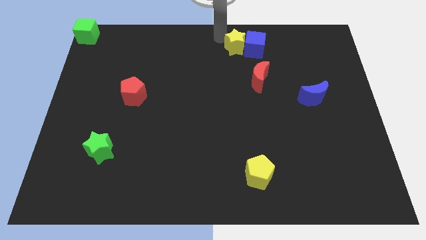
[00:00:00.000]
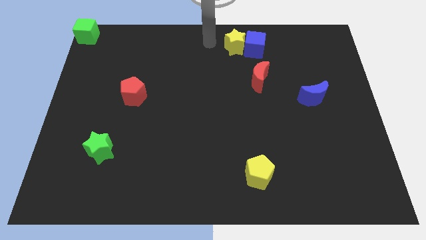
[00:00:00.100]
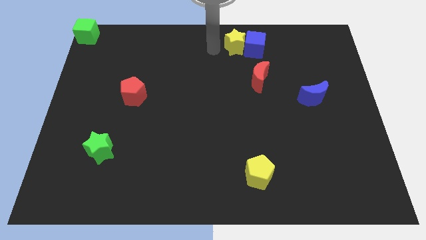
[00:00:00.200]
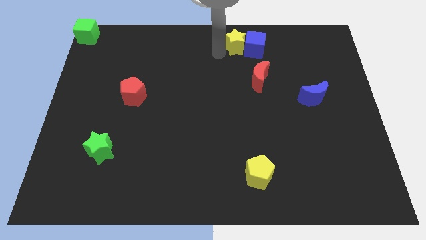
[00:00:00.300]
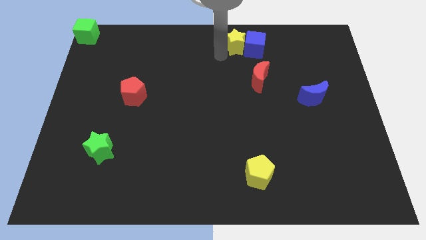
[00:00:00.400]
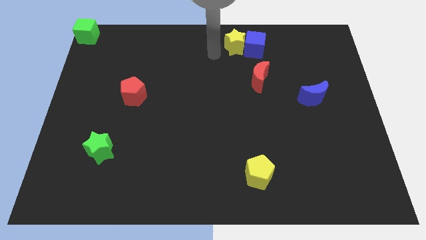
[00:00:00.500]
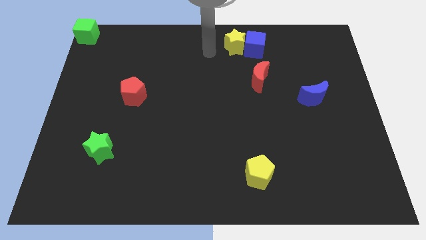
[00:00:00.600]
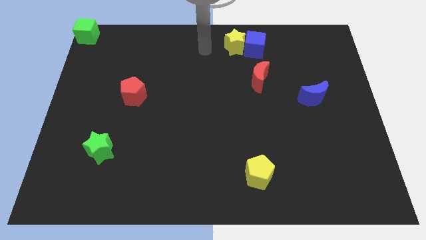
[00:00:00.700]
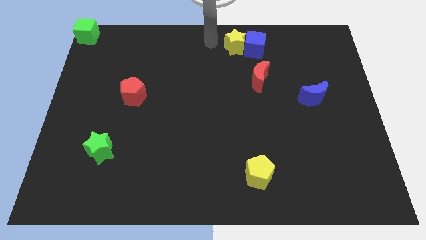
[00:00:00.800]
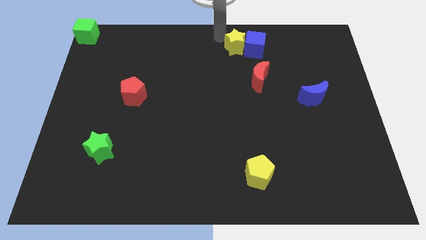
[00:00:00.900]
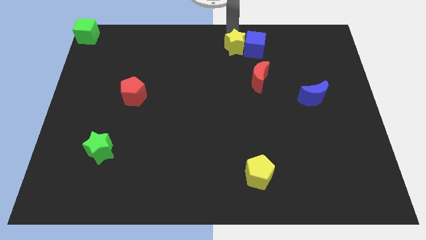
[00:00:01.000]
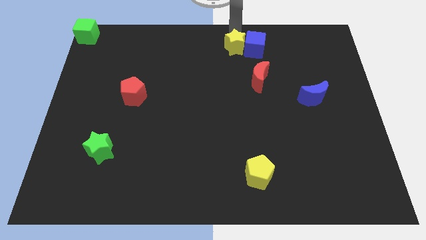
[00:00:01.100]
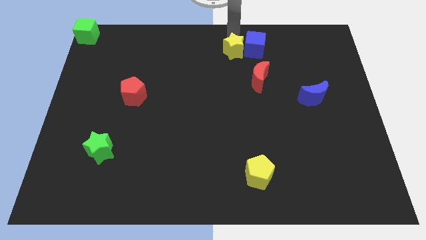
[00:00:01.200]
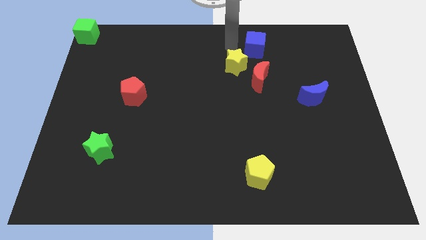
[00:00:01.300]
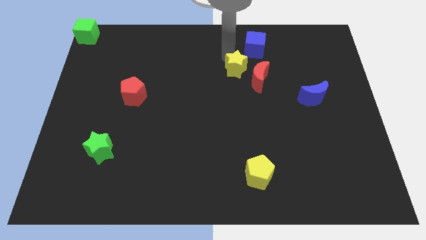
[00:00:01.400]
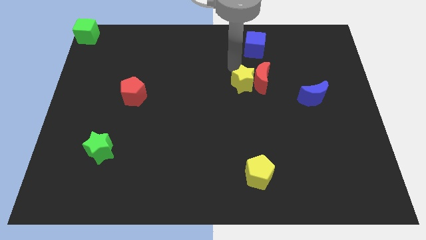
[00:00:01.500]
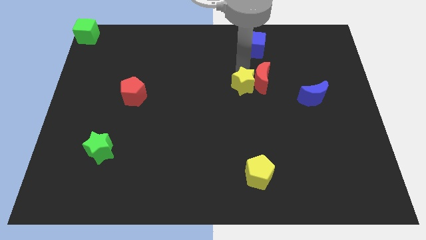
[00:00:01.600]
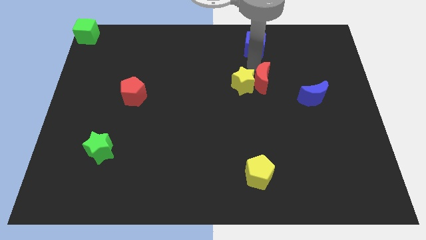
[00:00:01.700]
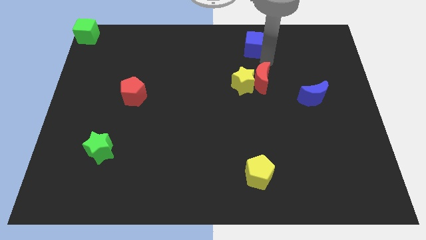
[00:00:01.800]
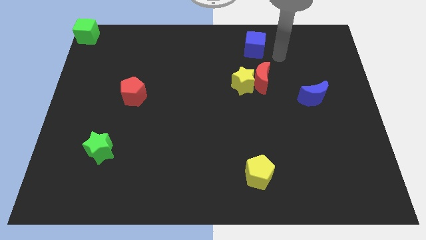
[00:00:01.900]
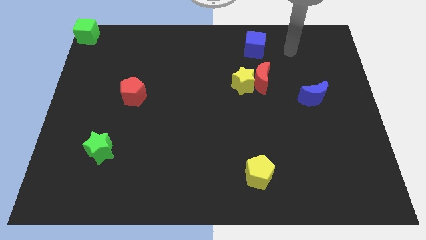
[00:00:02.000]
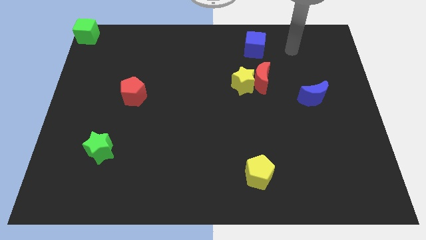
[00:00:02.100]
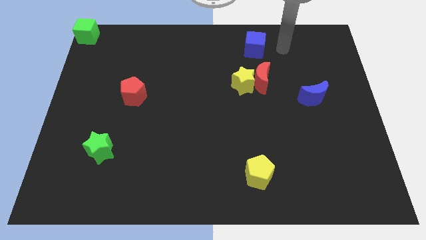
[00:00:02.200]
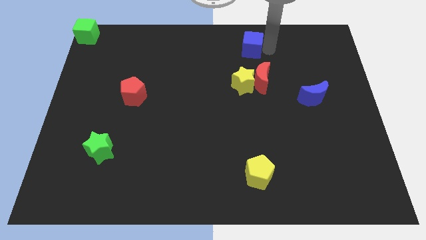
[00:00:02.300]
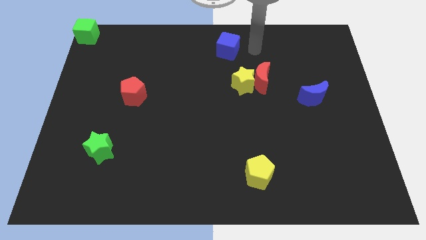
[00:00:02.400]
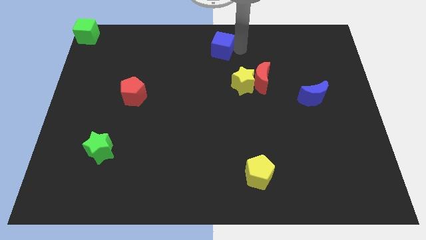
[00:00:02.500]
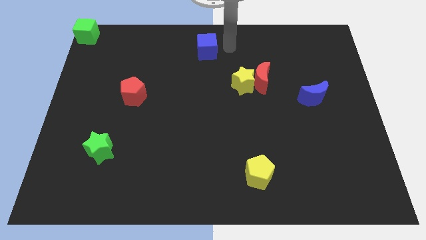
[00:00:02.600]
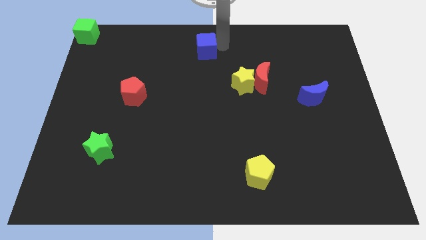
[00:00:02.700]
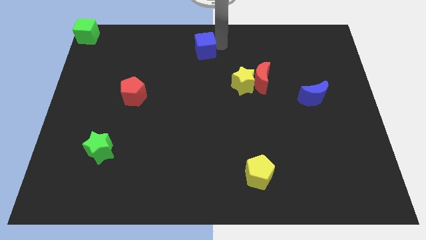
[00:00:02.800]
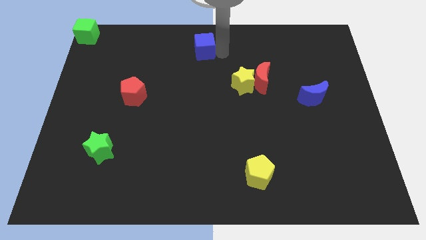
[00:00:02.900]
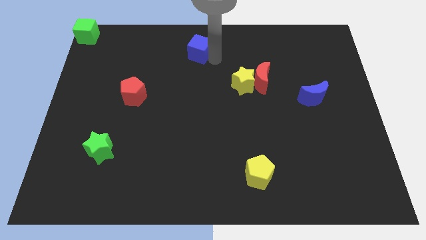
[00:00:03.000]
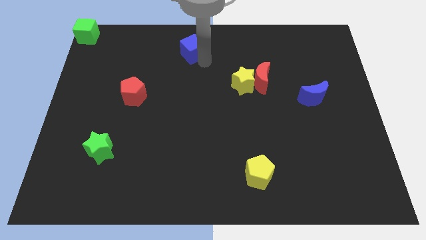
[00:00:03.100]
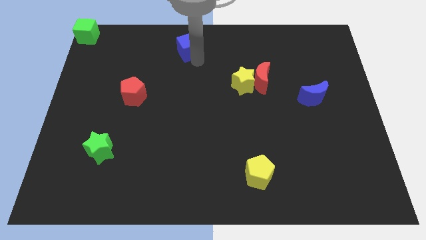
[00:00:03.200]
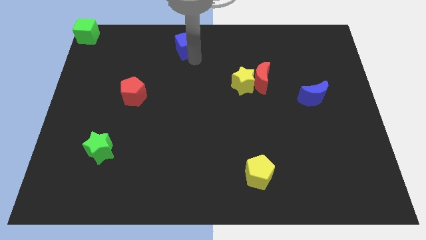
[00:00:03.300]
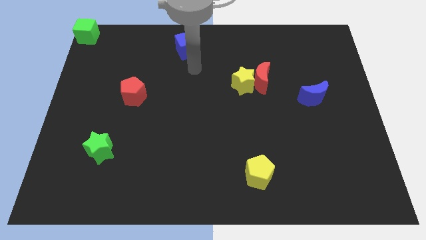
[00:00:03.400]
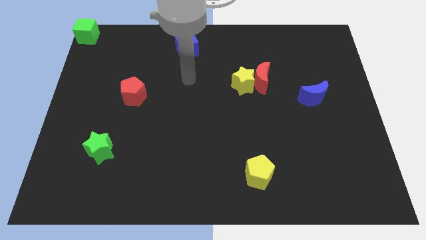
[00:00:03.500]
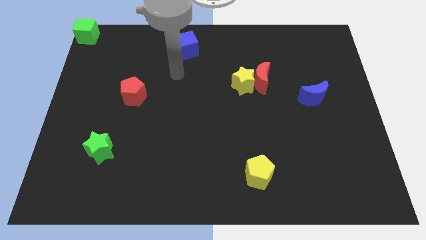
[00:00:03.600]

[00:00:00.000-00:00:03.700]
separate the yellow star from the blue cube

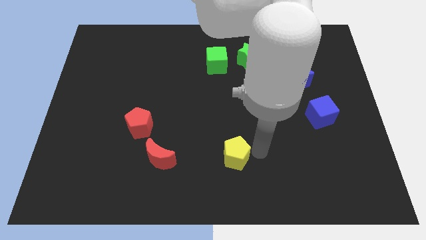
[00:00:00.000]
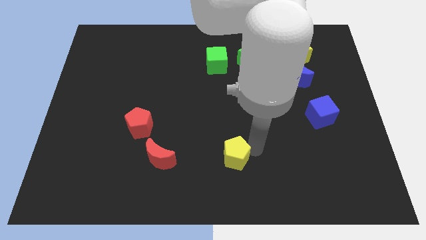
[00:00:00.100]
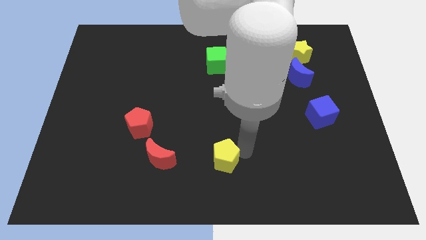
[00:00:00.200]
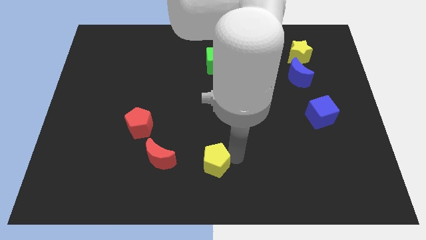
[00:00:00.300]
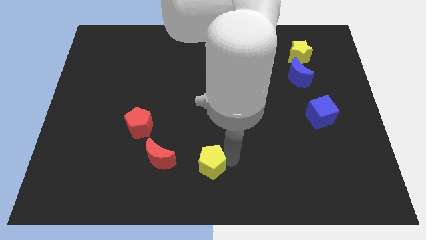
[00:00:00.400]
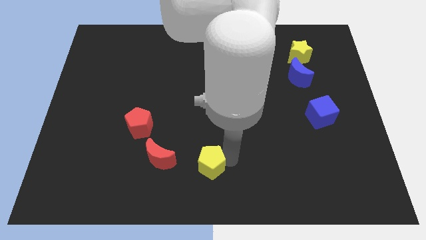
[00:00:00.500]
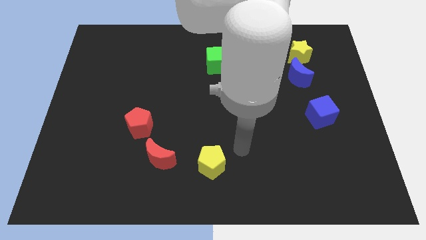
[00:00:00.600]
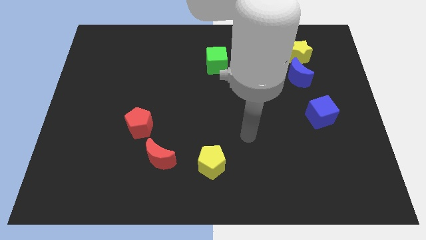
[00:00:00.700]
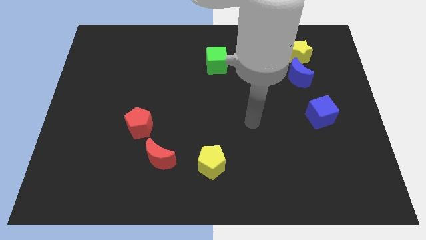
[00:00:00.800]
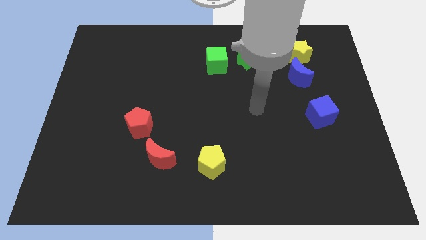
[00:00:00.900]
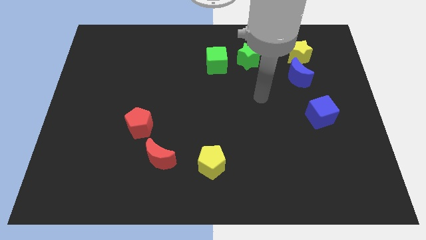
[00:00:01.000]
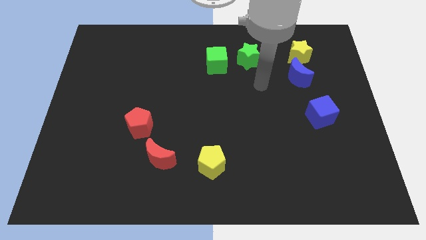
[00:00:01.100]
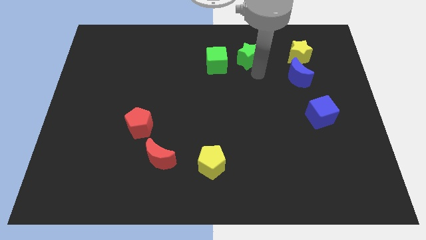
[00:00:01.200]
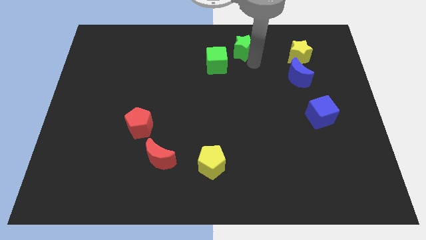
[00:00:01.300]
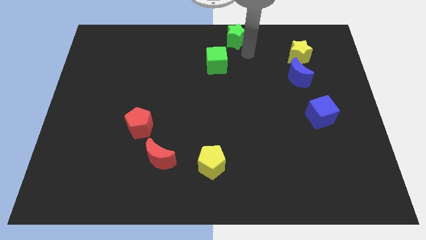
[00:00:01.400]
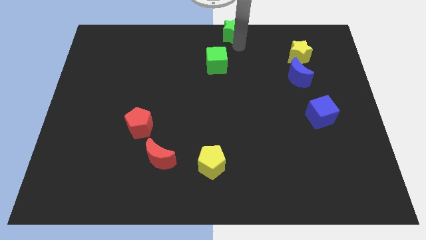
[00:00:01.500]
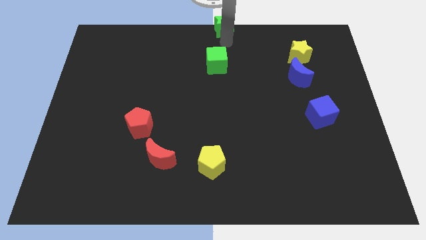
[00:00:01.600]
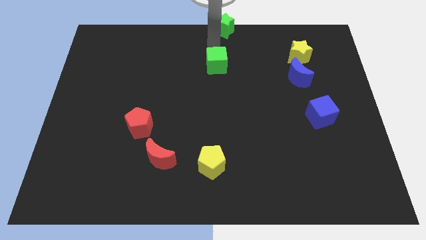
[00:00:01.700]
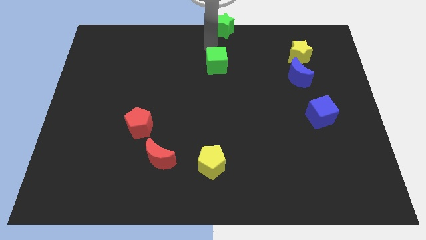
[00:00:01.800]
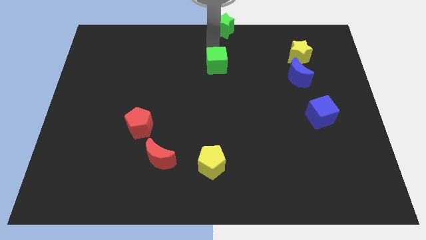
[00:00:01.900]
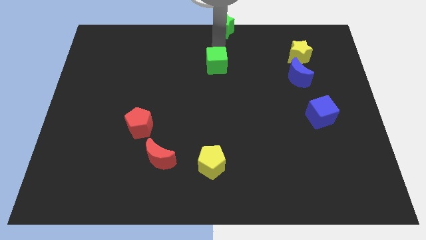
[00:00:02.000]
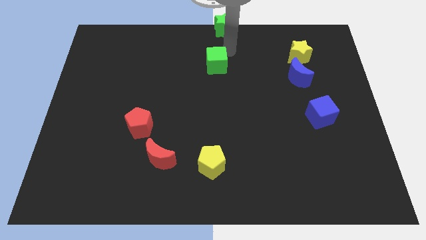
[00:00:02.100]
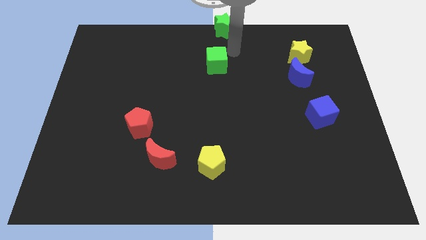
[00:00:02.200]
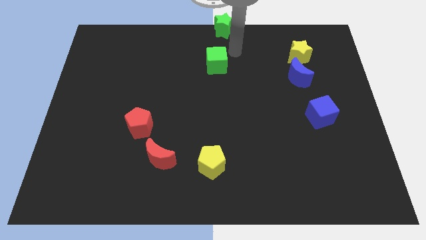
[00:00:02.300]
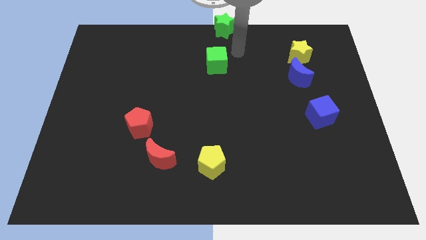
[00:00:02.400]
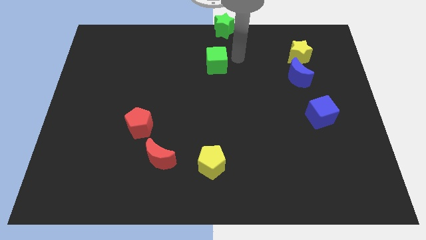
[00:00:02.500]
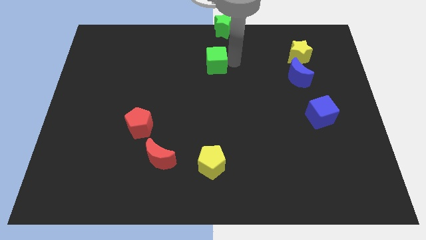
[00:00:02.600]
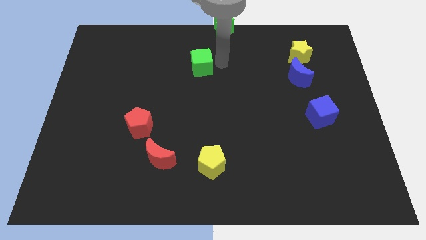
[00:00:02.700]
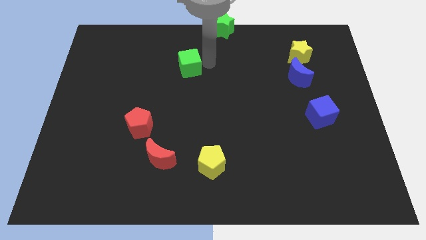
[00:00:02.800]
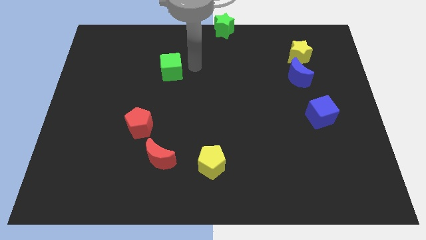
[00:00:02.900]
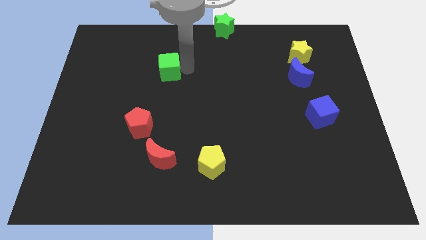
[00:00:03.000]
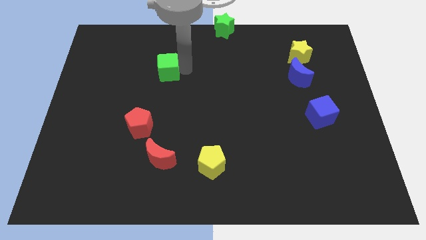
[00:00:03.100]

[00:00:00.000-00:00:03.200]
slightly move the yellow pentagon towards the left side

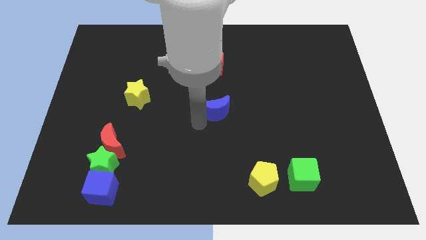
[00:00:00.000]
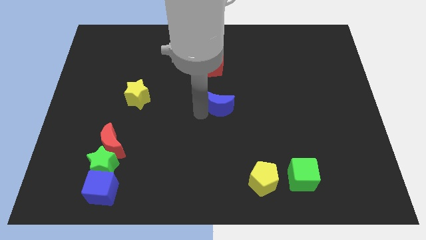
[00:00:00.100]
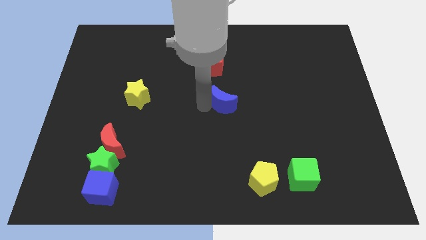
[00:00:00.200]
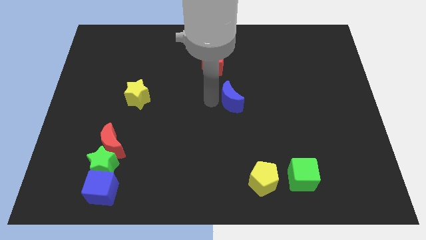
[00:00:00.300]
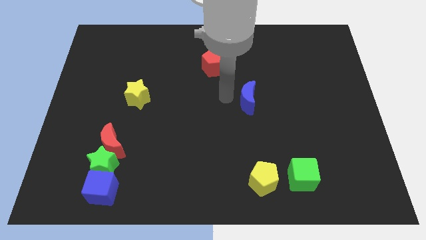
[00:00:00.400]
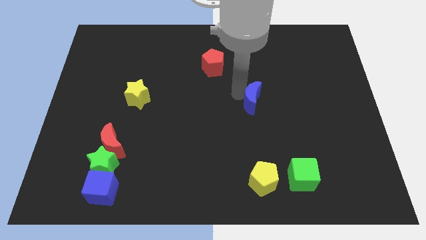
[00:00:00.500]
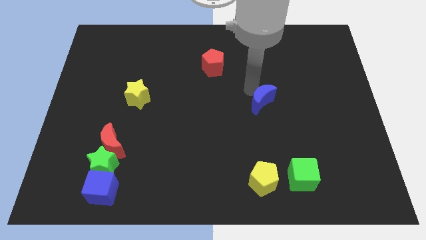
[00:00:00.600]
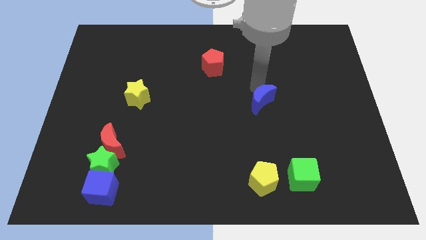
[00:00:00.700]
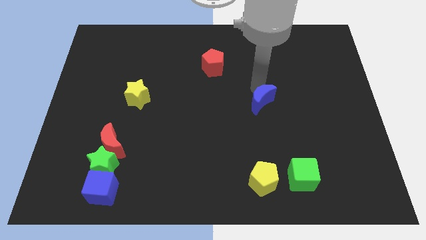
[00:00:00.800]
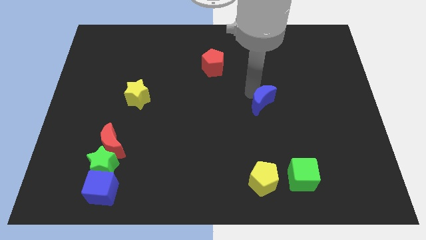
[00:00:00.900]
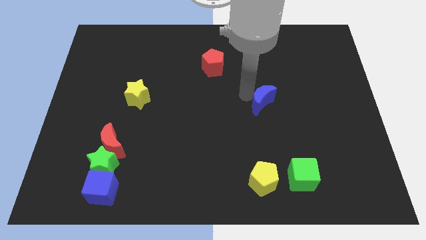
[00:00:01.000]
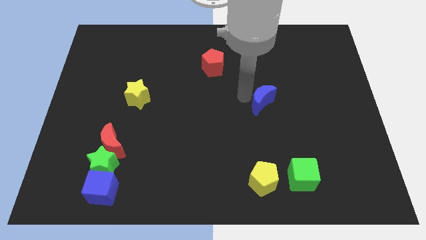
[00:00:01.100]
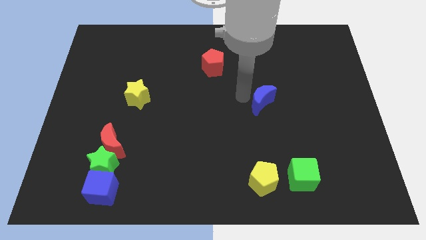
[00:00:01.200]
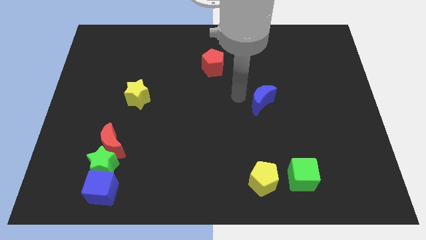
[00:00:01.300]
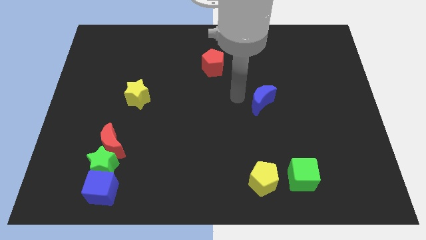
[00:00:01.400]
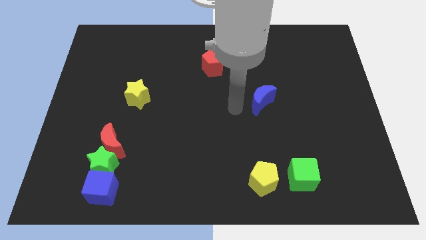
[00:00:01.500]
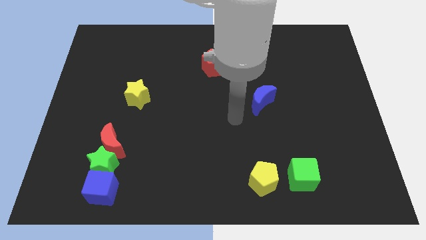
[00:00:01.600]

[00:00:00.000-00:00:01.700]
push the blue moon to the right side of the board

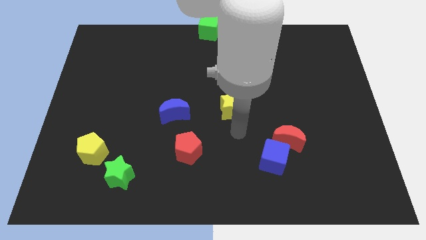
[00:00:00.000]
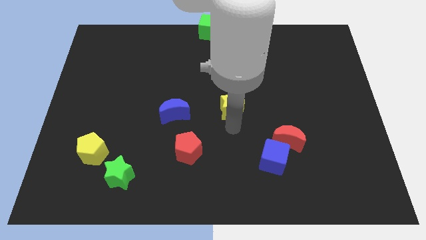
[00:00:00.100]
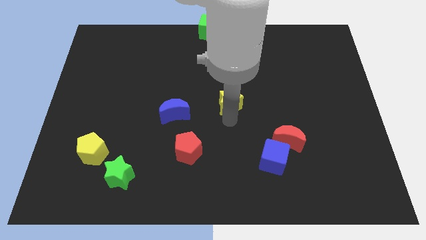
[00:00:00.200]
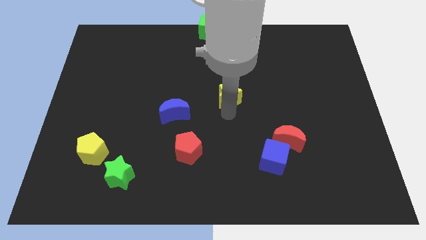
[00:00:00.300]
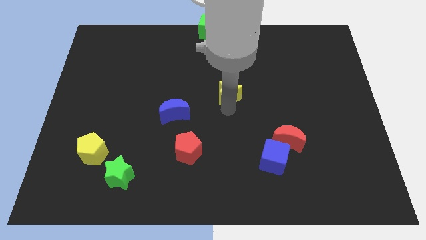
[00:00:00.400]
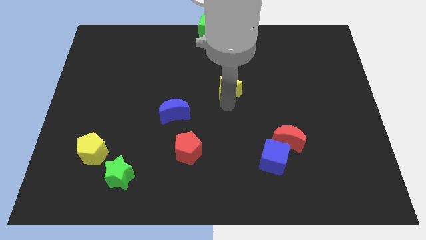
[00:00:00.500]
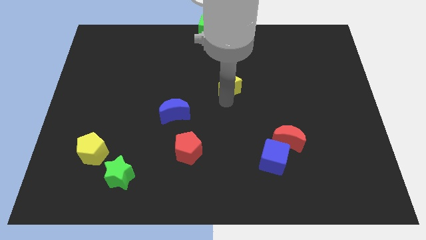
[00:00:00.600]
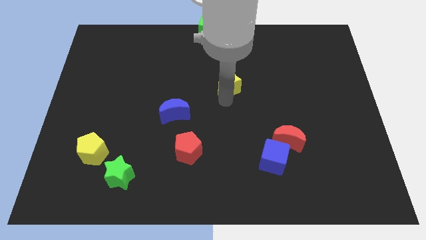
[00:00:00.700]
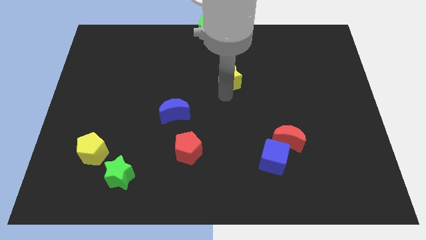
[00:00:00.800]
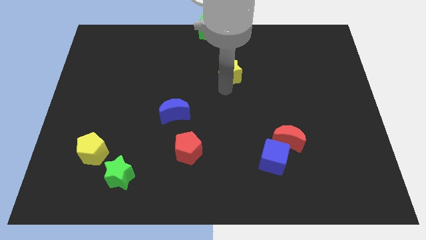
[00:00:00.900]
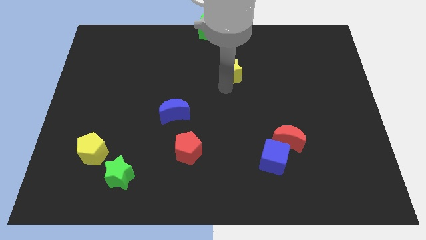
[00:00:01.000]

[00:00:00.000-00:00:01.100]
move the yellow star upward to the center